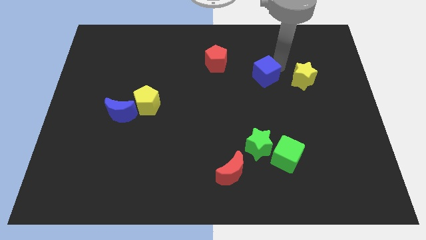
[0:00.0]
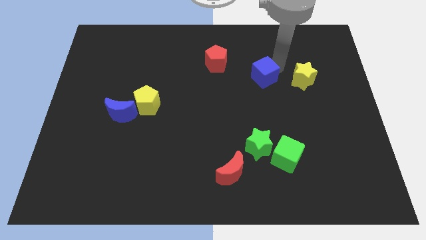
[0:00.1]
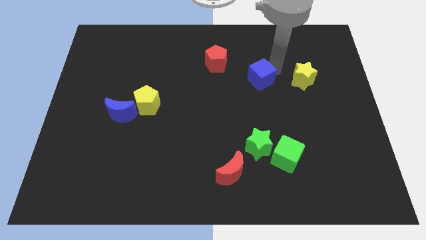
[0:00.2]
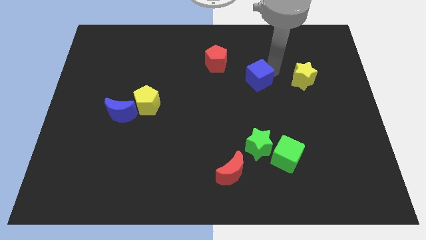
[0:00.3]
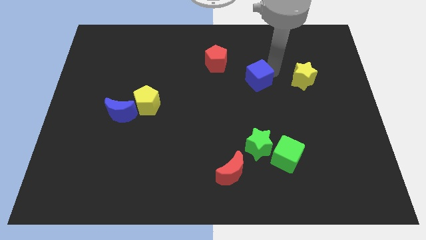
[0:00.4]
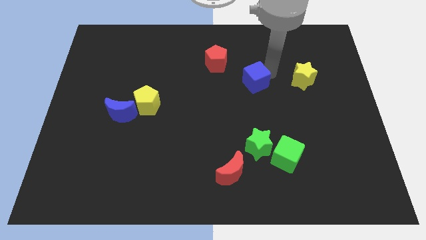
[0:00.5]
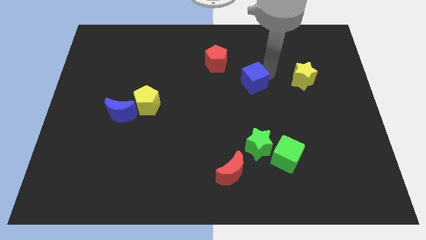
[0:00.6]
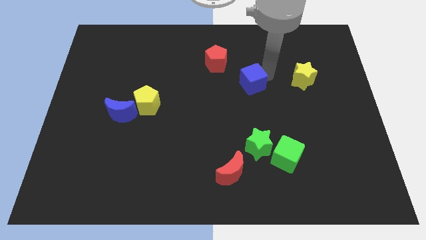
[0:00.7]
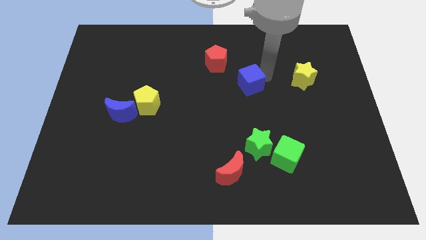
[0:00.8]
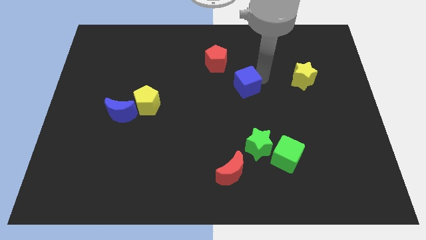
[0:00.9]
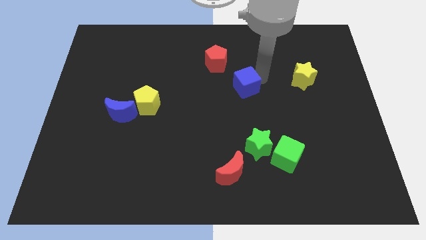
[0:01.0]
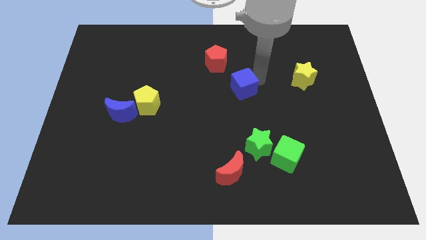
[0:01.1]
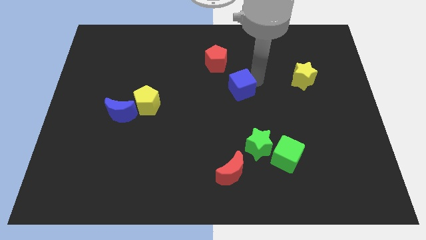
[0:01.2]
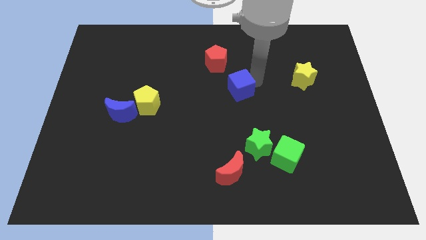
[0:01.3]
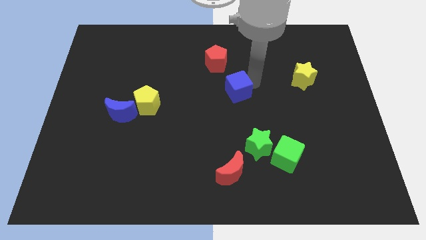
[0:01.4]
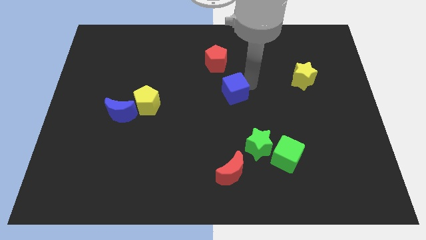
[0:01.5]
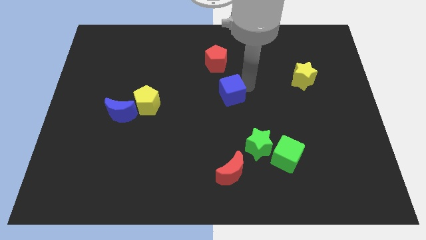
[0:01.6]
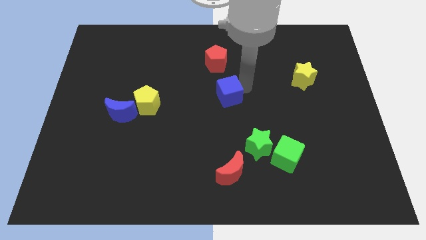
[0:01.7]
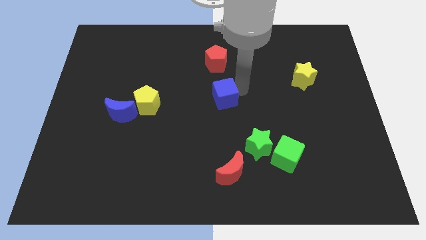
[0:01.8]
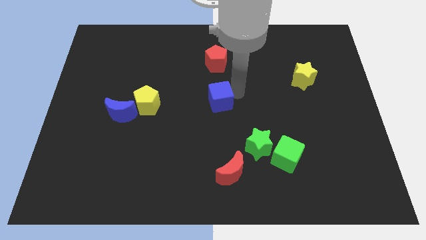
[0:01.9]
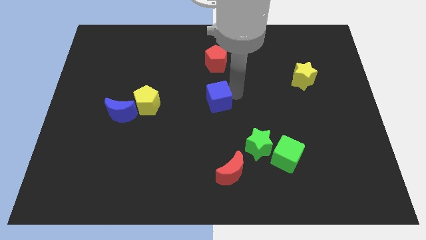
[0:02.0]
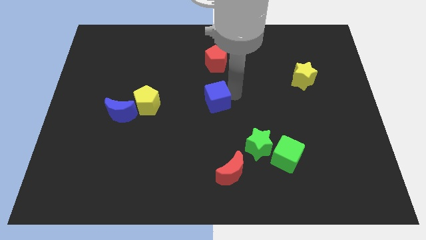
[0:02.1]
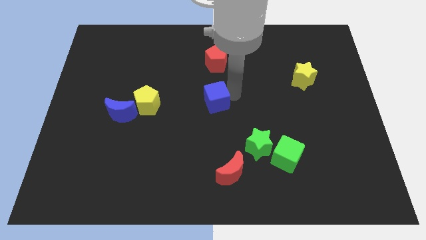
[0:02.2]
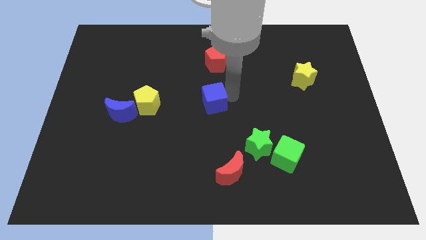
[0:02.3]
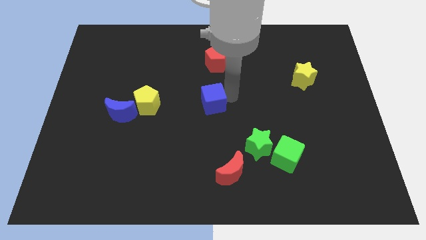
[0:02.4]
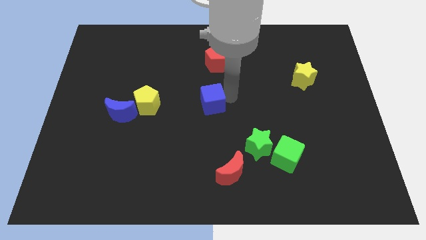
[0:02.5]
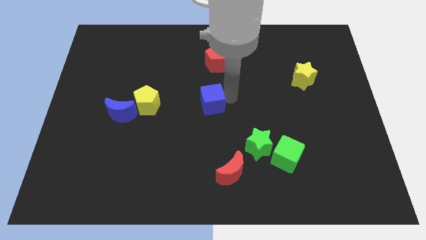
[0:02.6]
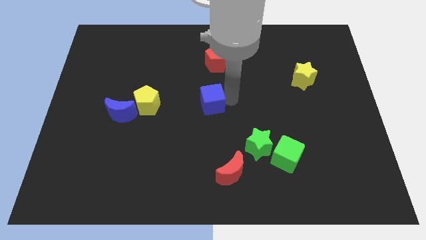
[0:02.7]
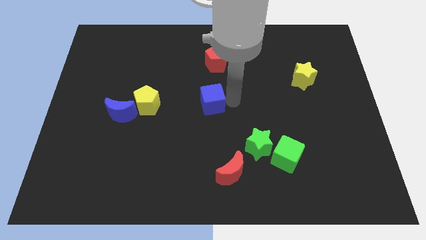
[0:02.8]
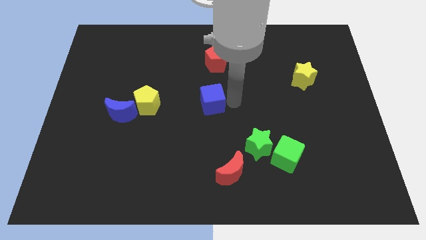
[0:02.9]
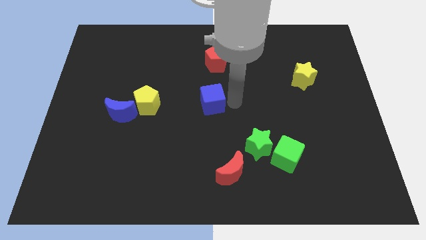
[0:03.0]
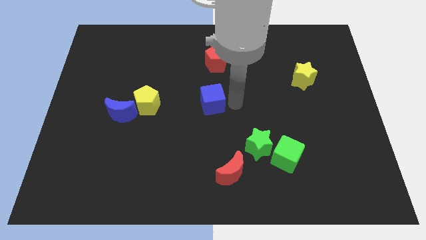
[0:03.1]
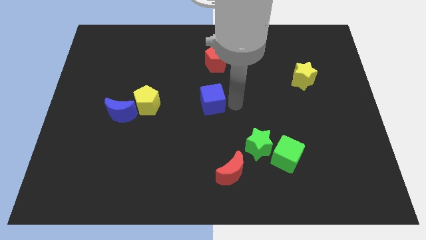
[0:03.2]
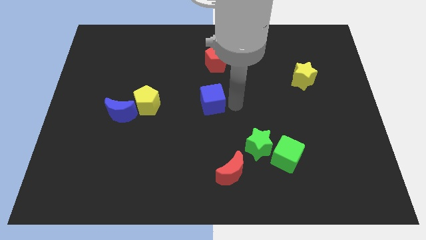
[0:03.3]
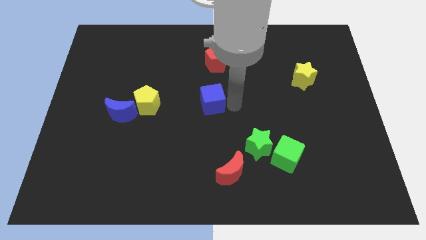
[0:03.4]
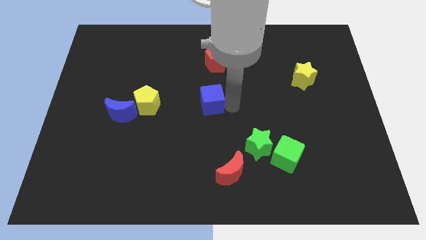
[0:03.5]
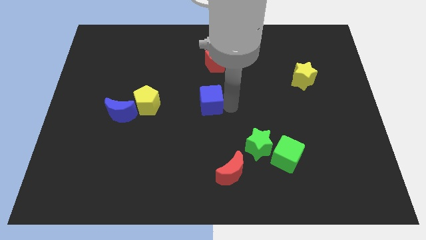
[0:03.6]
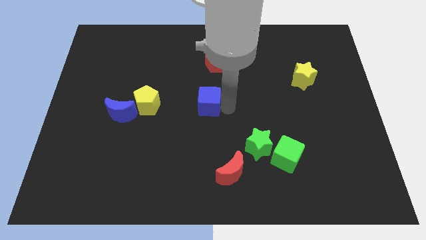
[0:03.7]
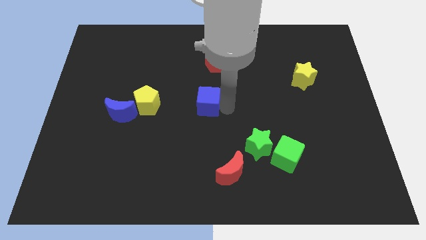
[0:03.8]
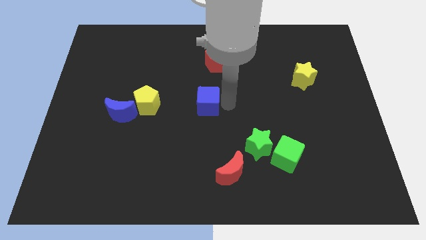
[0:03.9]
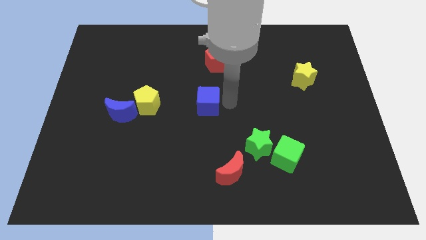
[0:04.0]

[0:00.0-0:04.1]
put the blue cube at the center of the board

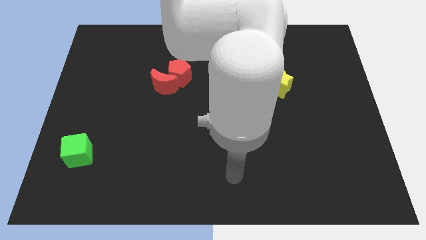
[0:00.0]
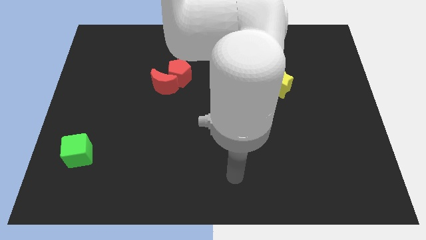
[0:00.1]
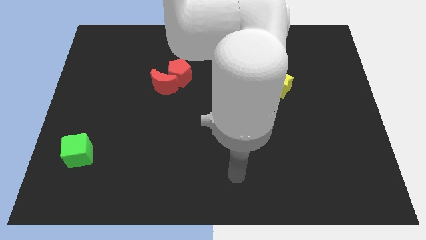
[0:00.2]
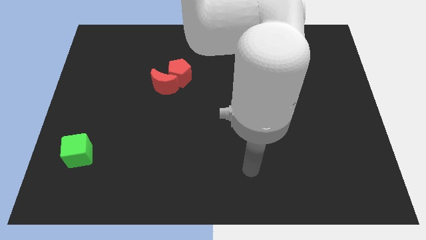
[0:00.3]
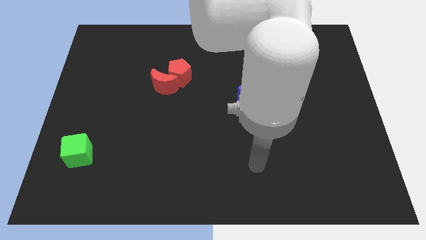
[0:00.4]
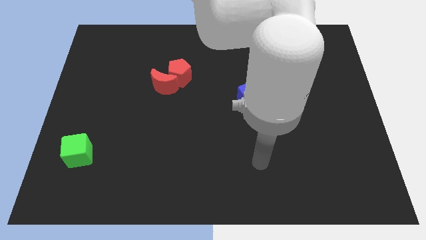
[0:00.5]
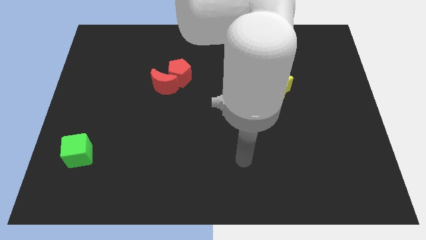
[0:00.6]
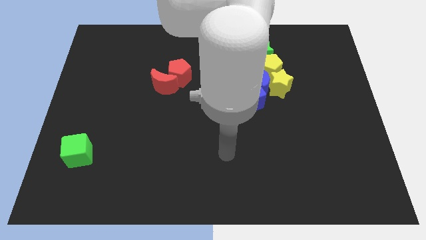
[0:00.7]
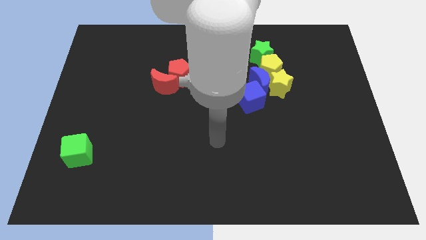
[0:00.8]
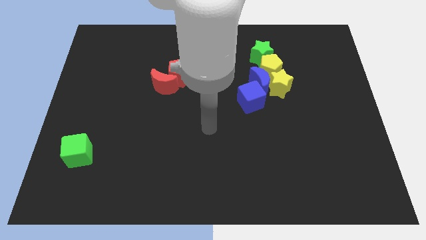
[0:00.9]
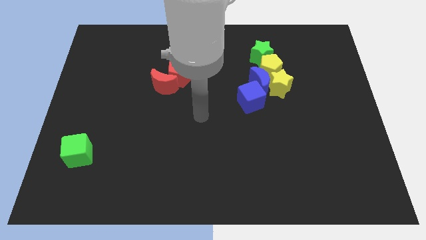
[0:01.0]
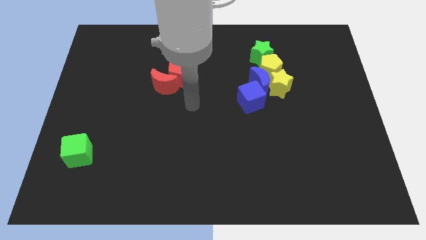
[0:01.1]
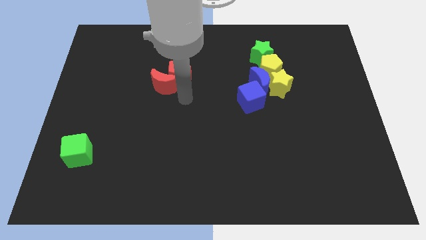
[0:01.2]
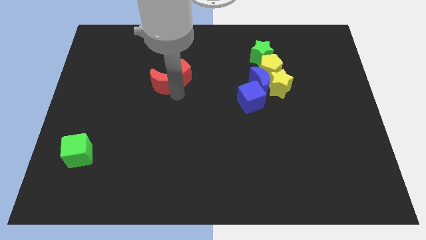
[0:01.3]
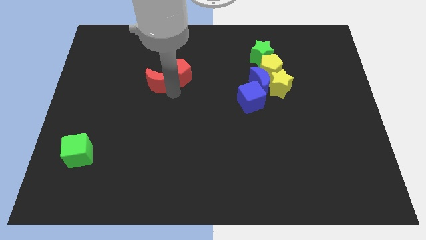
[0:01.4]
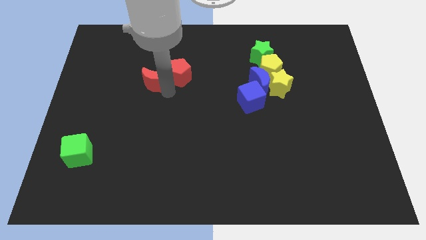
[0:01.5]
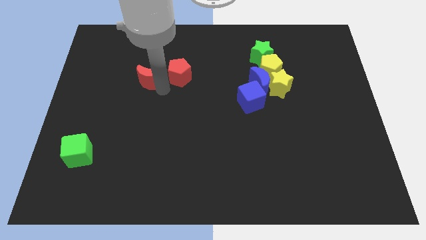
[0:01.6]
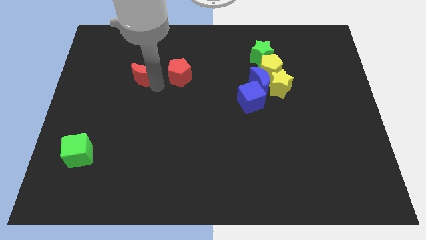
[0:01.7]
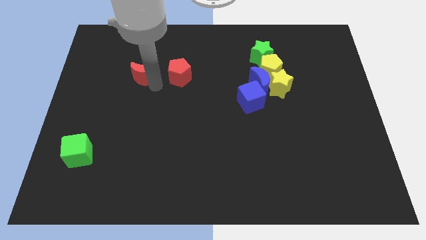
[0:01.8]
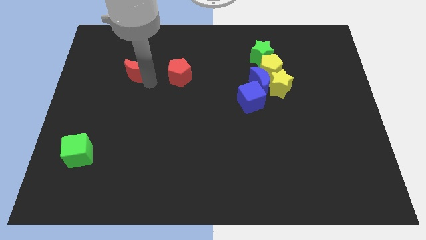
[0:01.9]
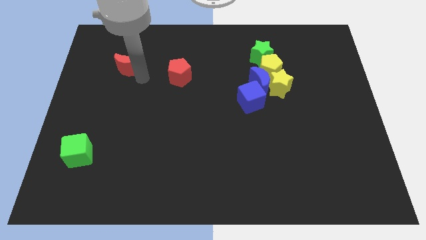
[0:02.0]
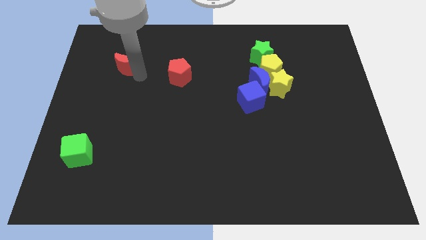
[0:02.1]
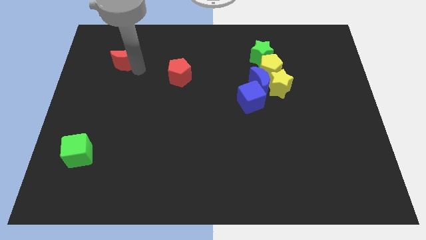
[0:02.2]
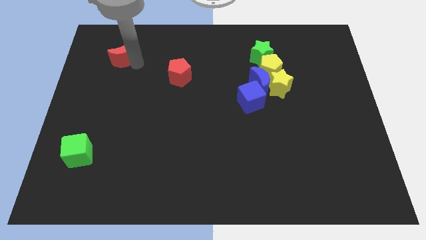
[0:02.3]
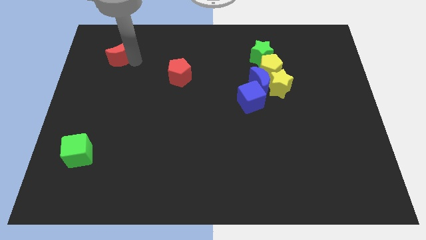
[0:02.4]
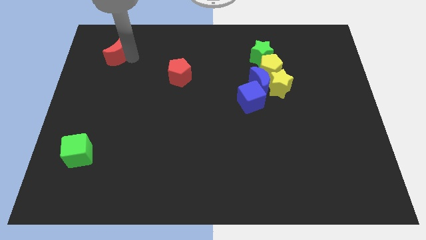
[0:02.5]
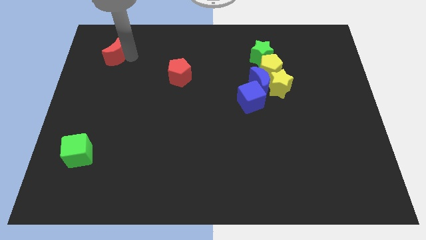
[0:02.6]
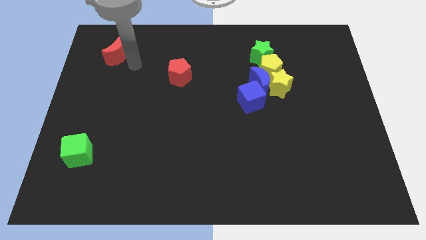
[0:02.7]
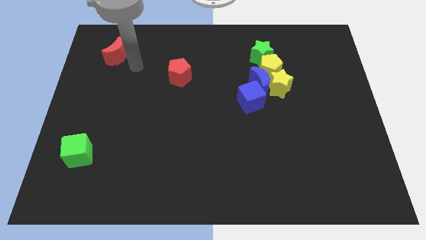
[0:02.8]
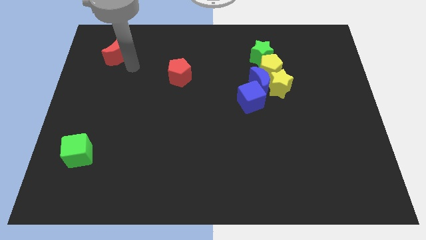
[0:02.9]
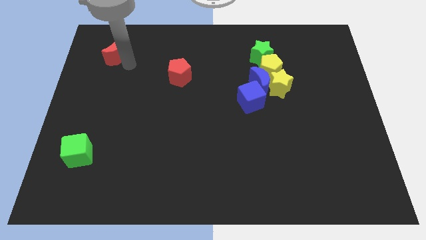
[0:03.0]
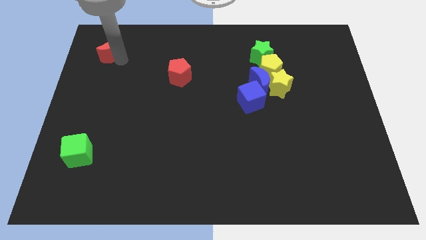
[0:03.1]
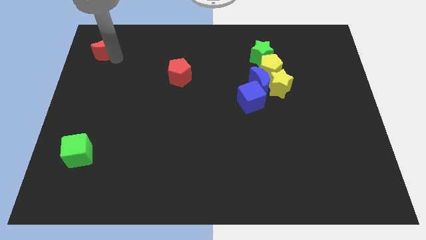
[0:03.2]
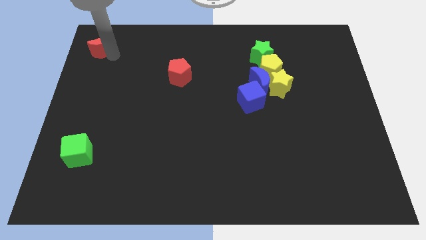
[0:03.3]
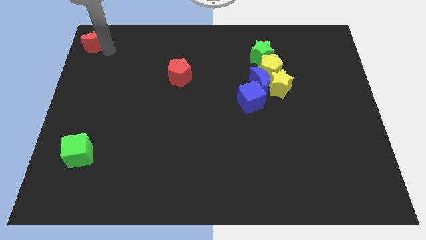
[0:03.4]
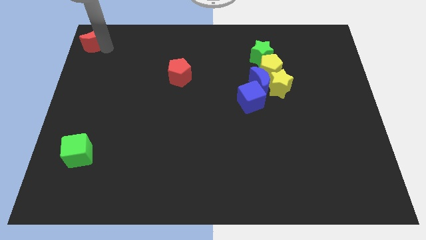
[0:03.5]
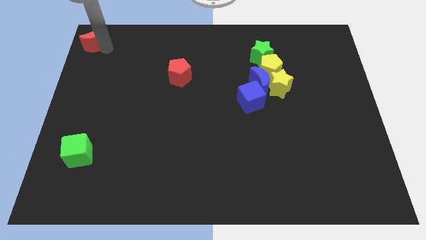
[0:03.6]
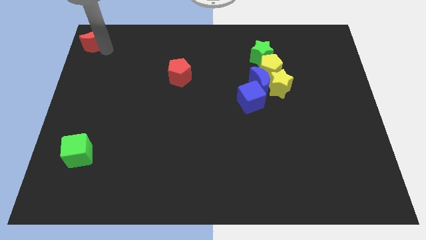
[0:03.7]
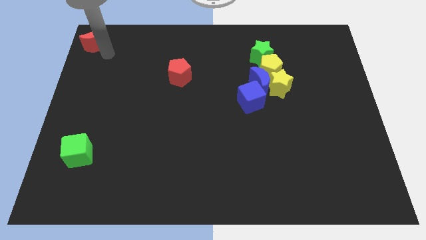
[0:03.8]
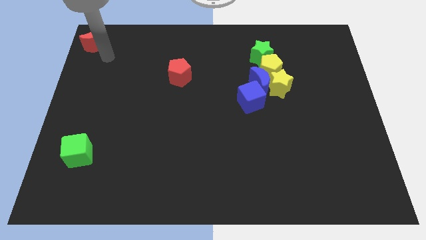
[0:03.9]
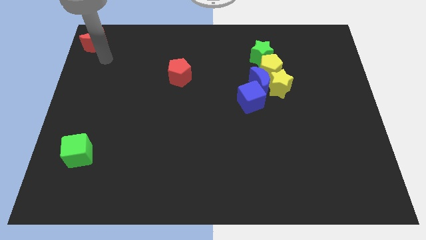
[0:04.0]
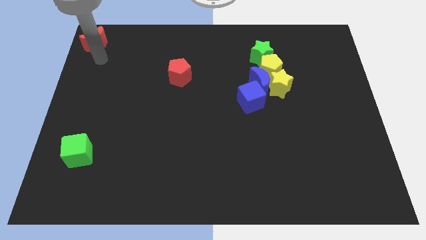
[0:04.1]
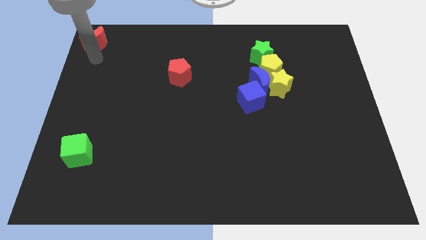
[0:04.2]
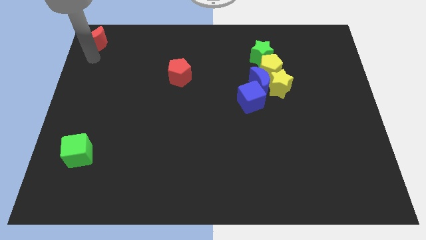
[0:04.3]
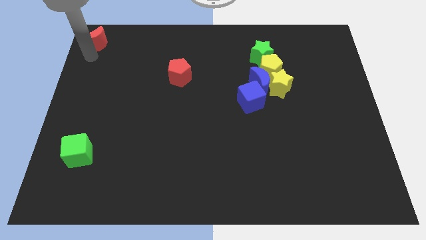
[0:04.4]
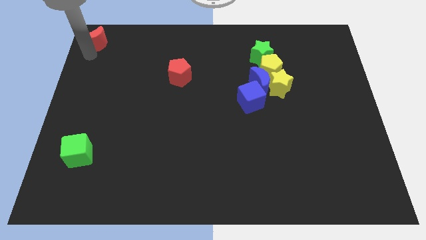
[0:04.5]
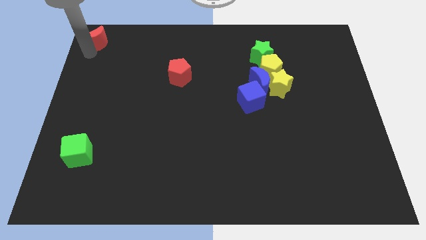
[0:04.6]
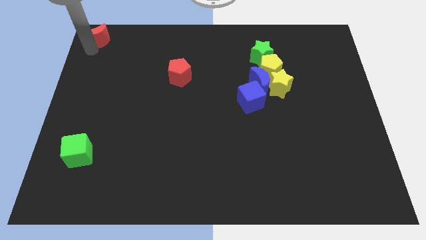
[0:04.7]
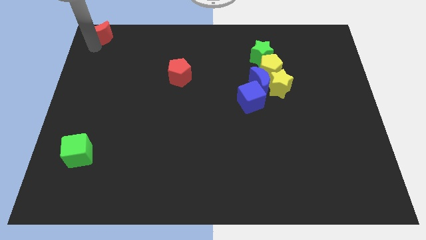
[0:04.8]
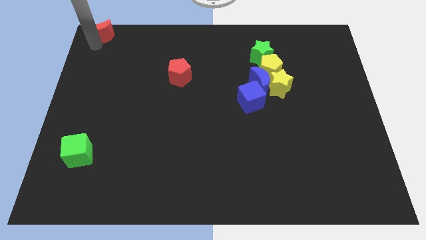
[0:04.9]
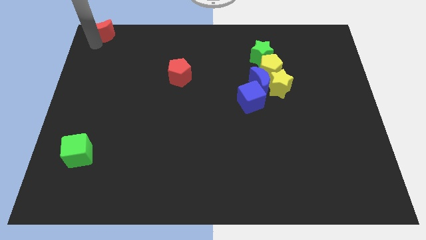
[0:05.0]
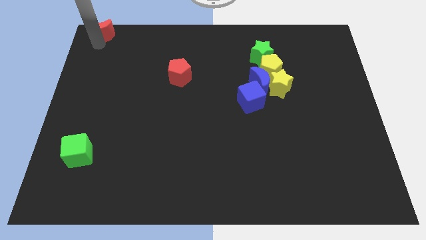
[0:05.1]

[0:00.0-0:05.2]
push the red moon towards the top left
